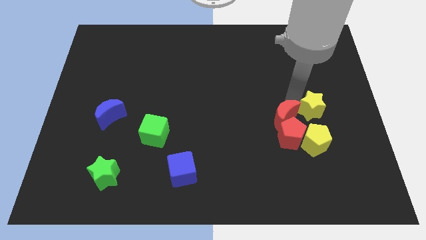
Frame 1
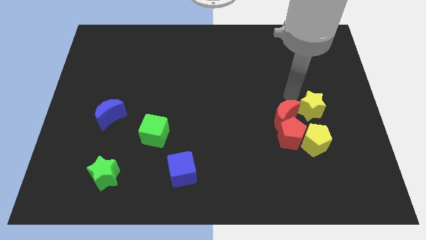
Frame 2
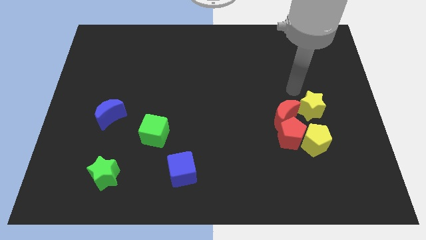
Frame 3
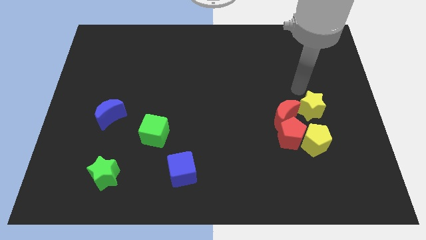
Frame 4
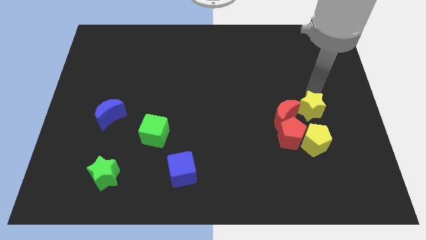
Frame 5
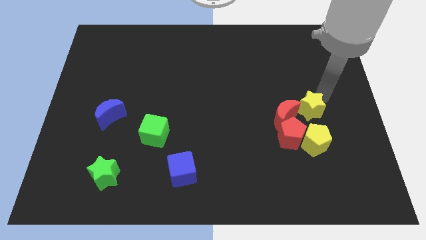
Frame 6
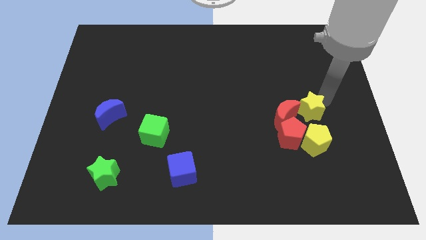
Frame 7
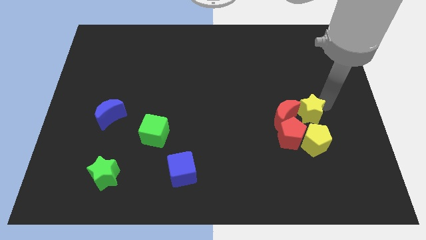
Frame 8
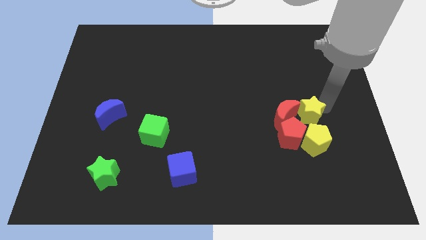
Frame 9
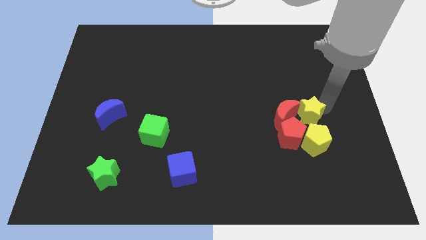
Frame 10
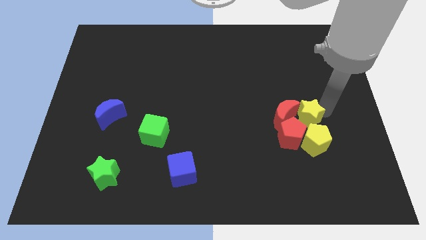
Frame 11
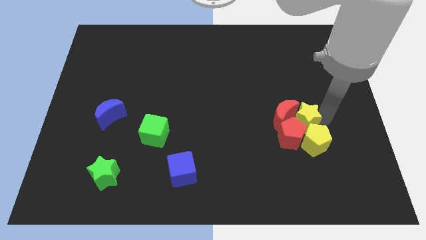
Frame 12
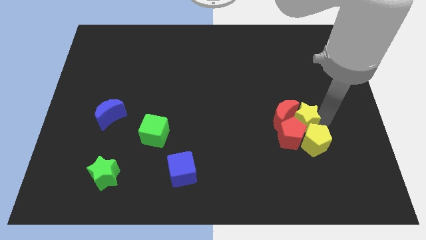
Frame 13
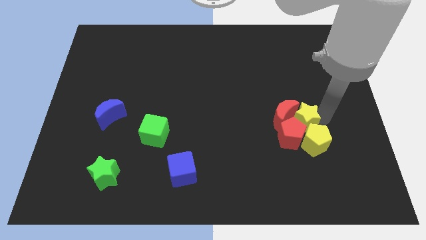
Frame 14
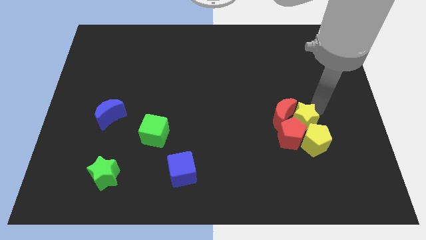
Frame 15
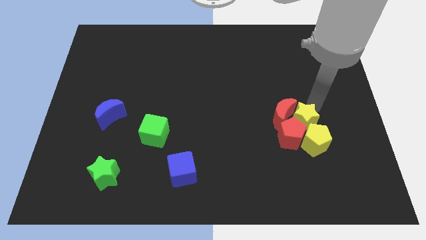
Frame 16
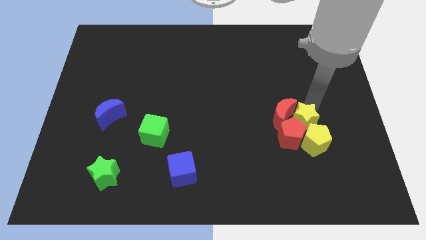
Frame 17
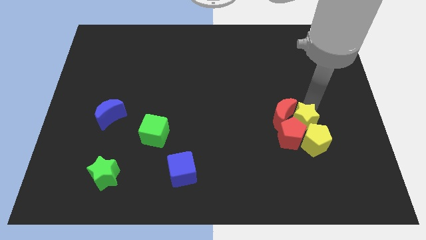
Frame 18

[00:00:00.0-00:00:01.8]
push the yellow star to make group of red and yellow blocks

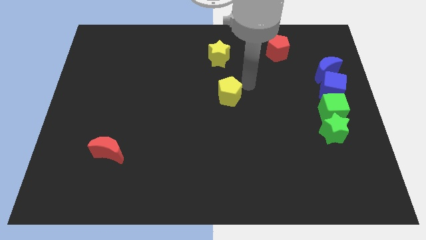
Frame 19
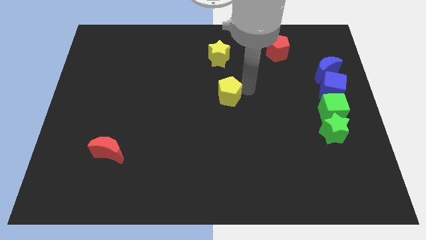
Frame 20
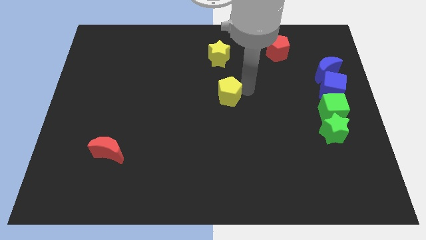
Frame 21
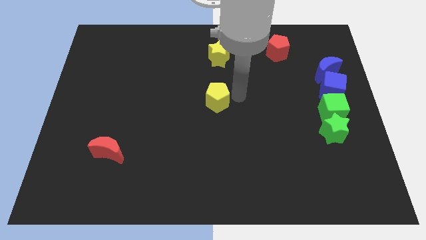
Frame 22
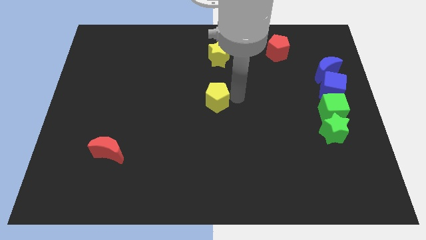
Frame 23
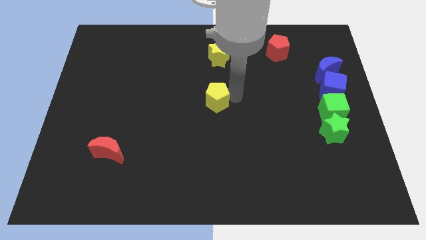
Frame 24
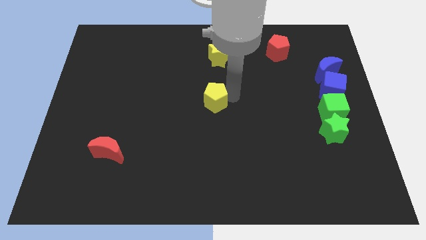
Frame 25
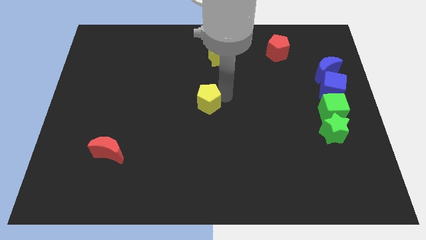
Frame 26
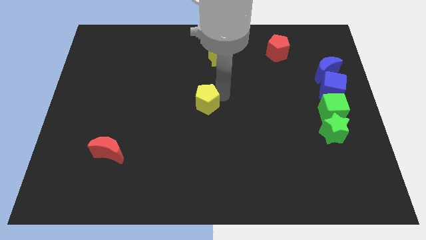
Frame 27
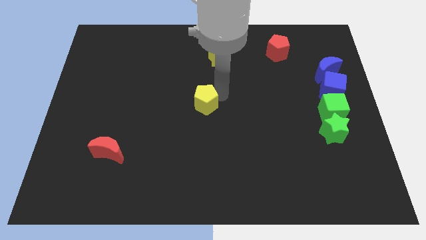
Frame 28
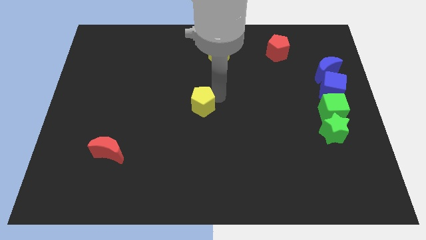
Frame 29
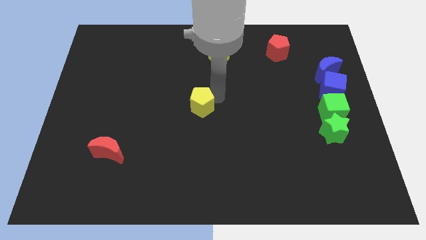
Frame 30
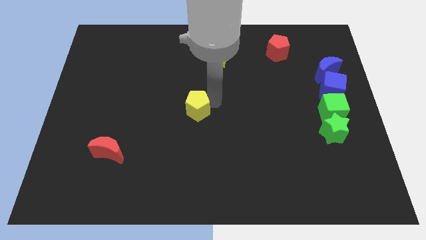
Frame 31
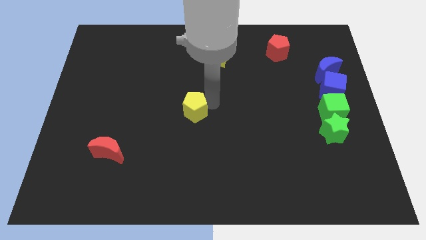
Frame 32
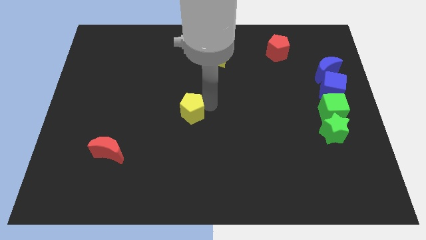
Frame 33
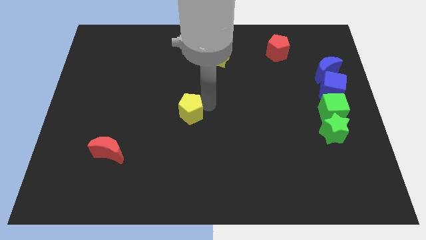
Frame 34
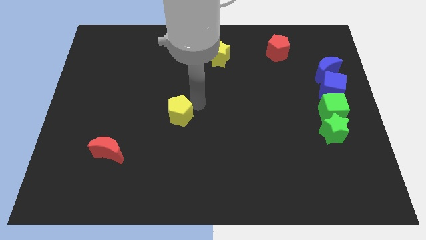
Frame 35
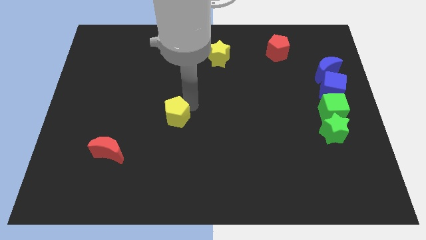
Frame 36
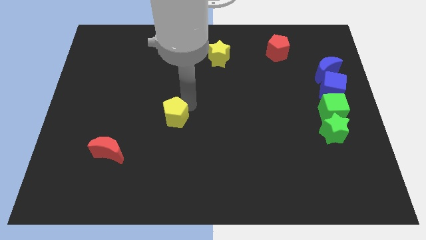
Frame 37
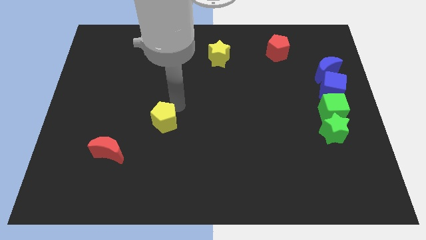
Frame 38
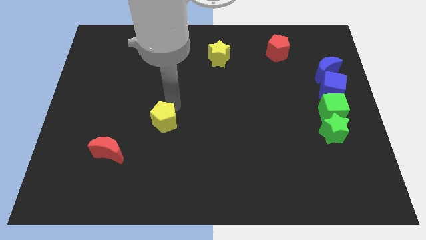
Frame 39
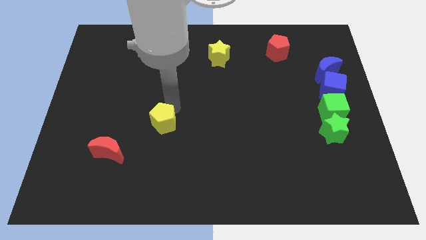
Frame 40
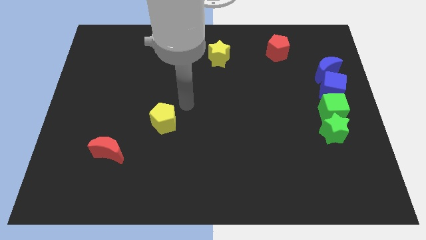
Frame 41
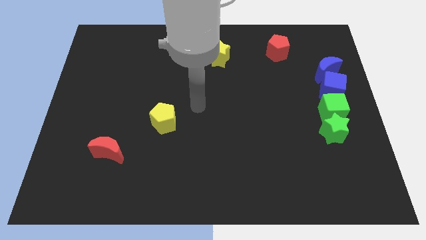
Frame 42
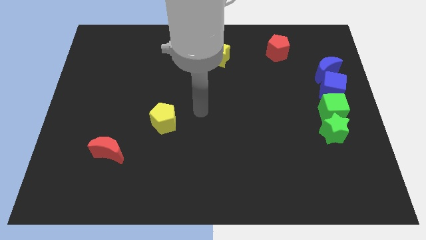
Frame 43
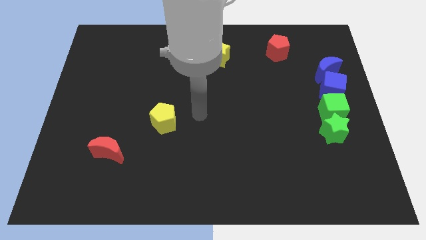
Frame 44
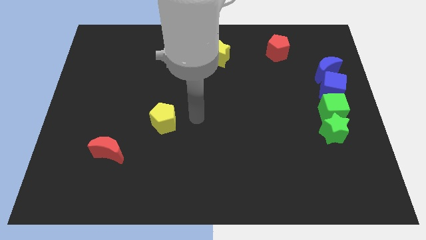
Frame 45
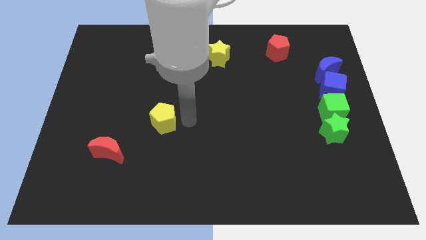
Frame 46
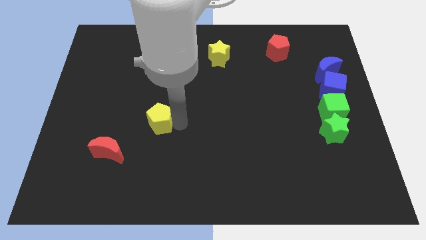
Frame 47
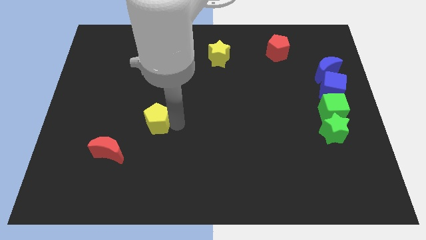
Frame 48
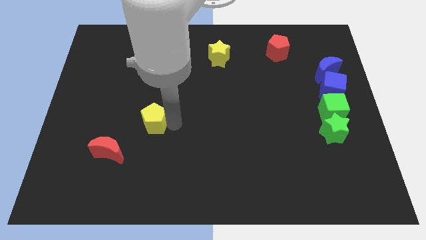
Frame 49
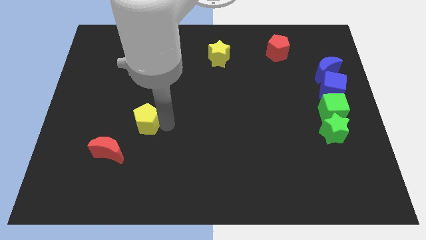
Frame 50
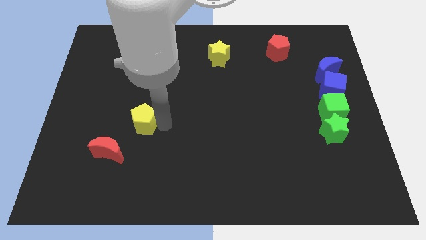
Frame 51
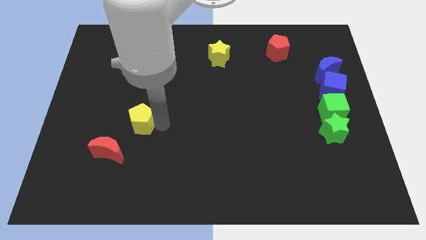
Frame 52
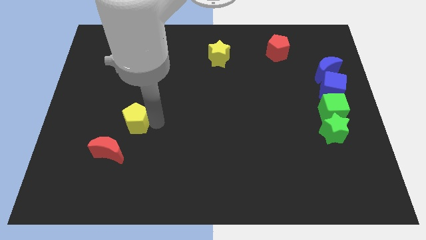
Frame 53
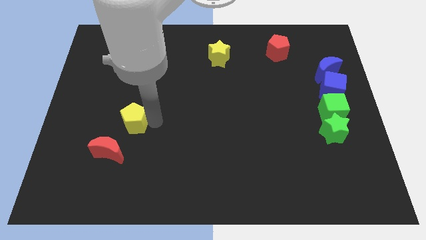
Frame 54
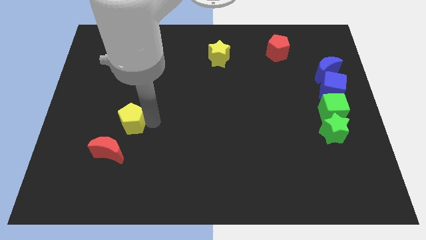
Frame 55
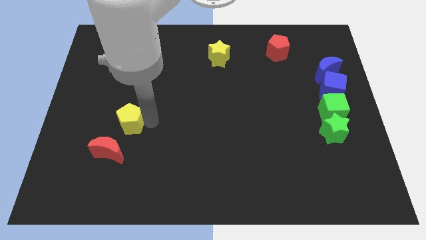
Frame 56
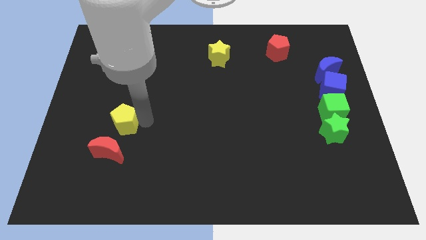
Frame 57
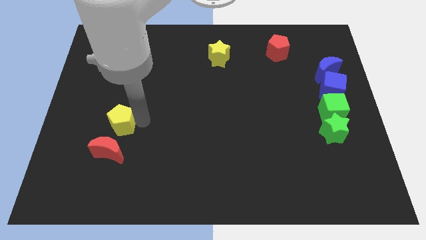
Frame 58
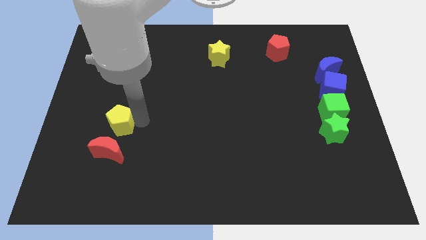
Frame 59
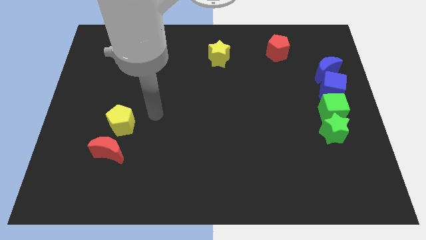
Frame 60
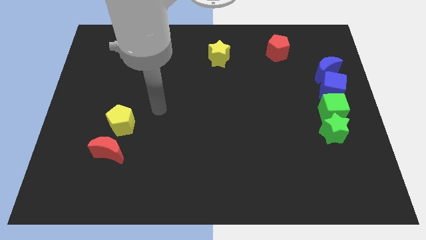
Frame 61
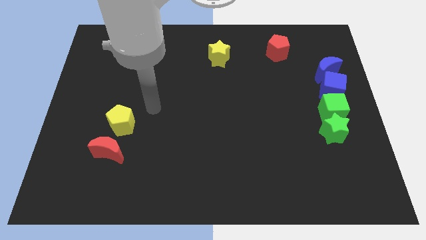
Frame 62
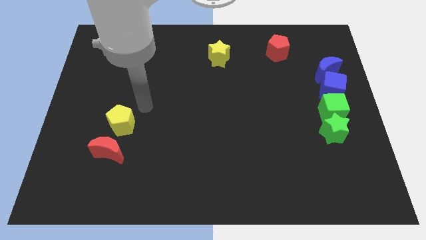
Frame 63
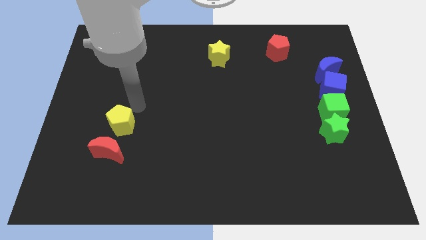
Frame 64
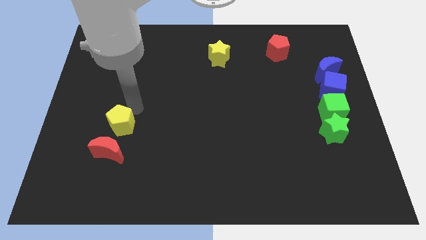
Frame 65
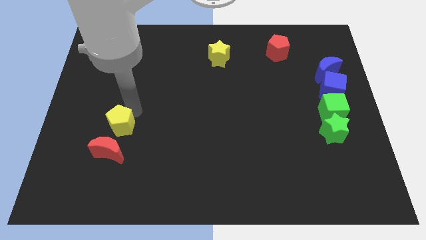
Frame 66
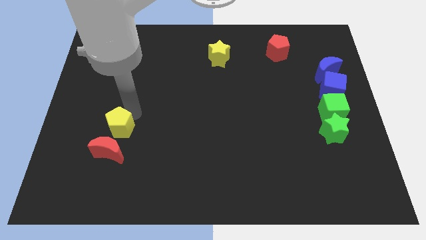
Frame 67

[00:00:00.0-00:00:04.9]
push the yellow pentagon diagonally bottom left to the yellow star

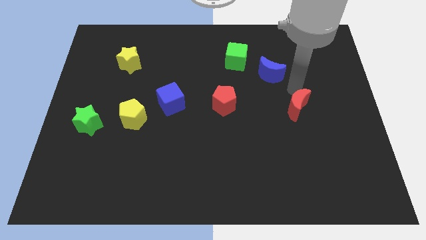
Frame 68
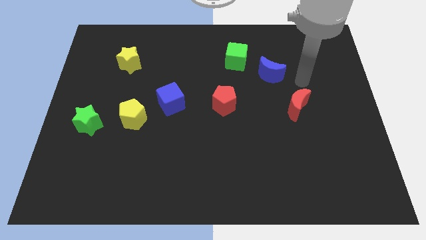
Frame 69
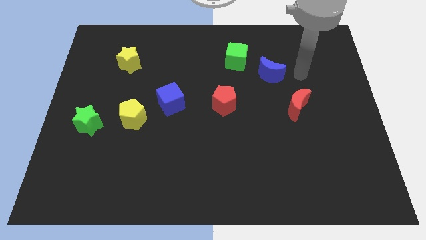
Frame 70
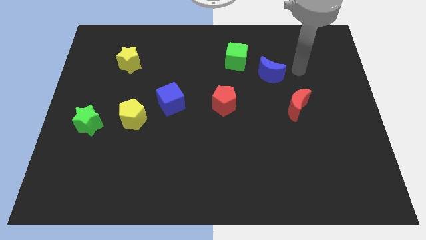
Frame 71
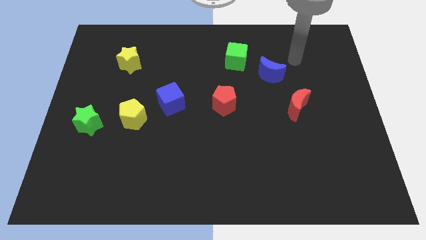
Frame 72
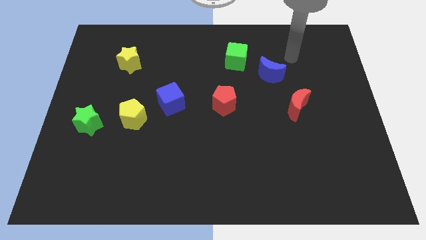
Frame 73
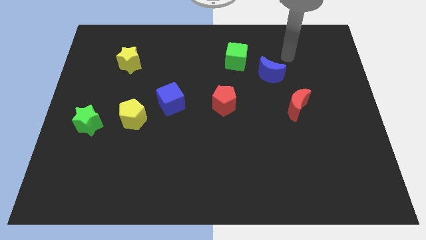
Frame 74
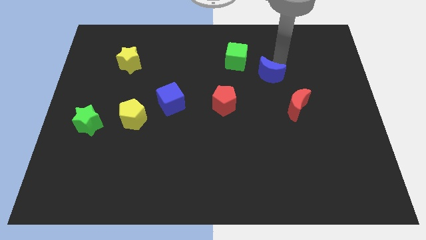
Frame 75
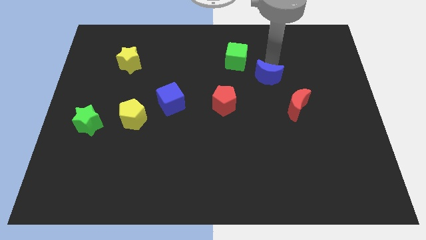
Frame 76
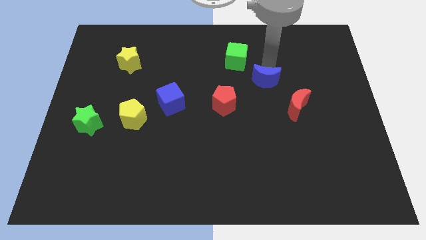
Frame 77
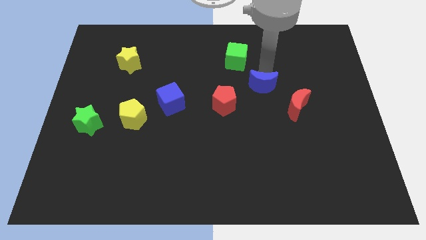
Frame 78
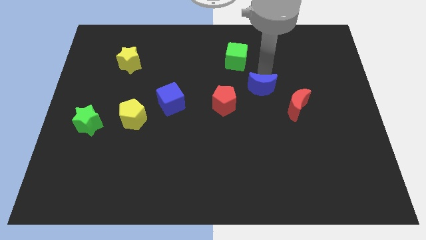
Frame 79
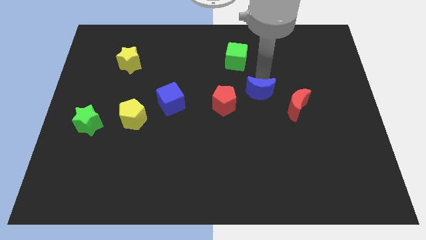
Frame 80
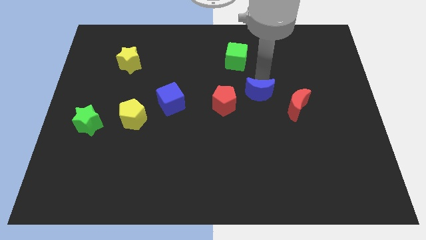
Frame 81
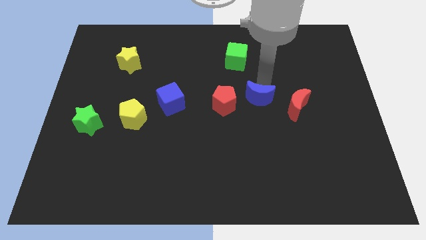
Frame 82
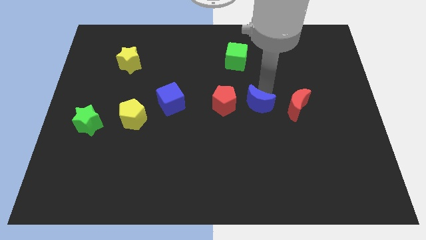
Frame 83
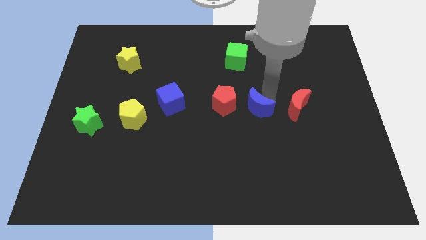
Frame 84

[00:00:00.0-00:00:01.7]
place the blue moon in between the red blocks

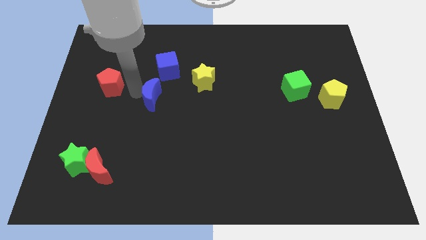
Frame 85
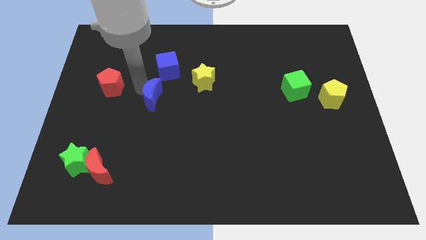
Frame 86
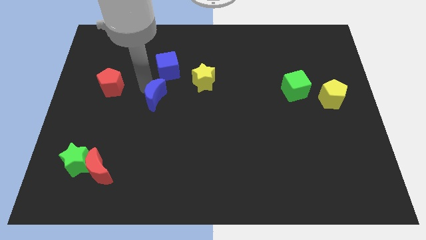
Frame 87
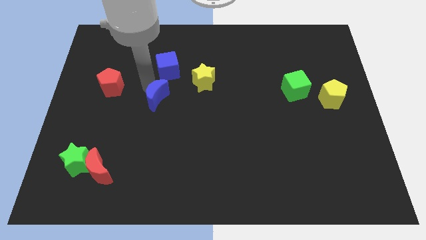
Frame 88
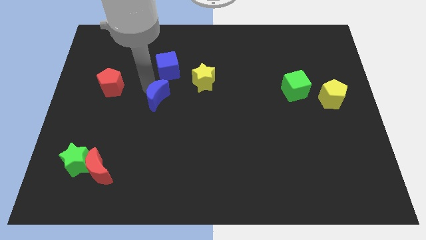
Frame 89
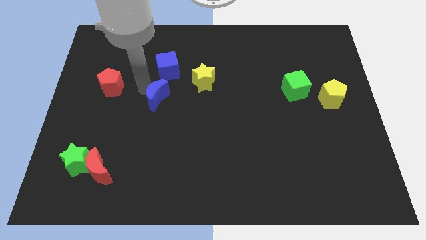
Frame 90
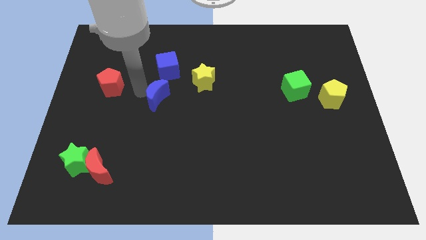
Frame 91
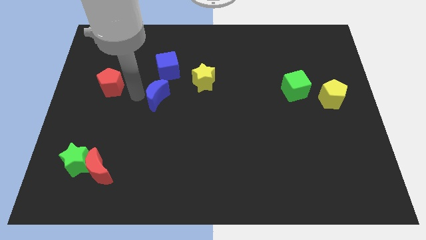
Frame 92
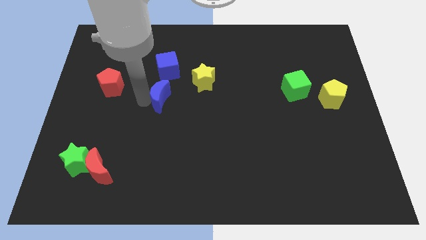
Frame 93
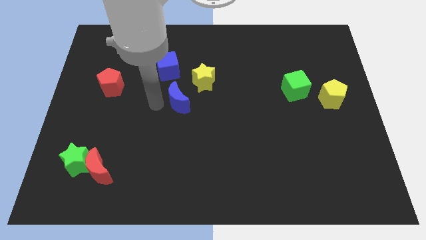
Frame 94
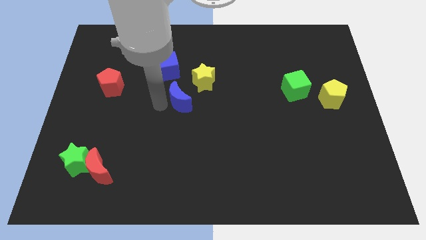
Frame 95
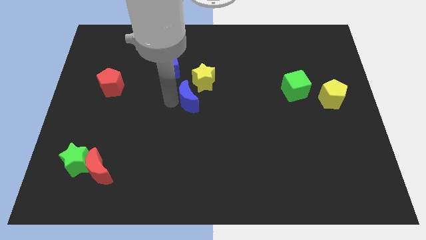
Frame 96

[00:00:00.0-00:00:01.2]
push the blue moon close to the yellow star
